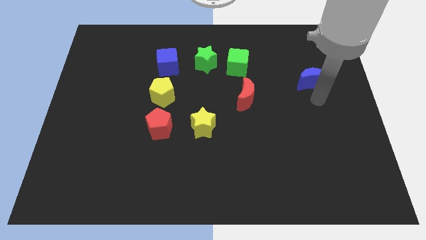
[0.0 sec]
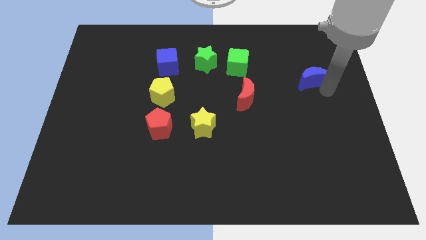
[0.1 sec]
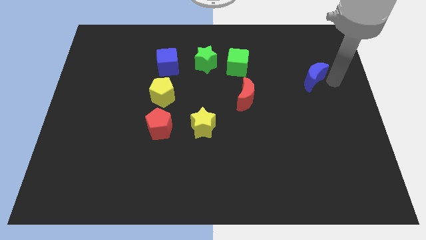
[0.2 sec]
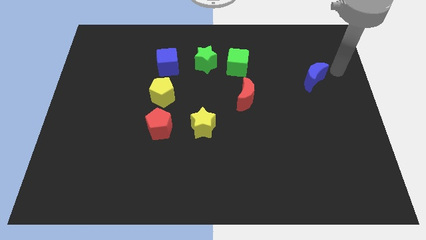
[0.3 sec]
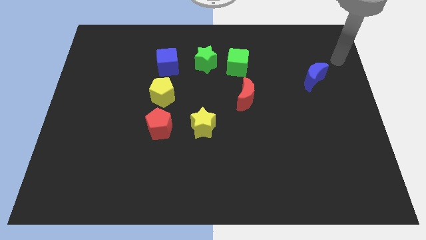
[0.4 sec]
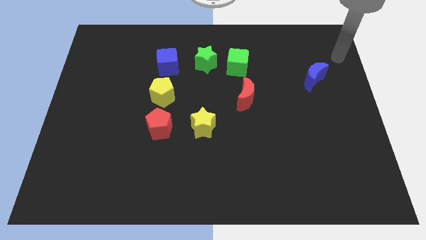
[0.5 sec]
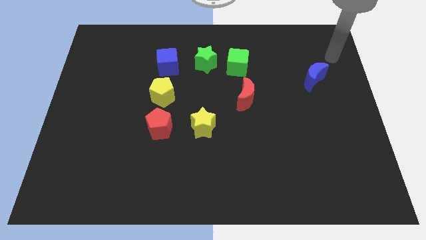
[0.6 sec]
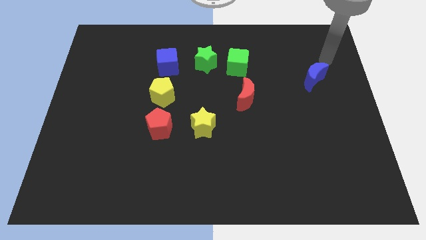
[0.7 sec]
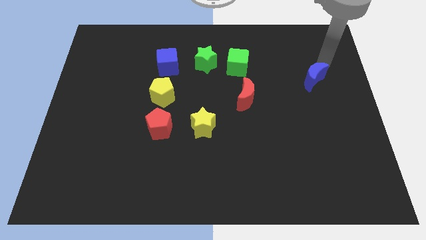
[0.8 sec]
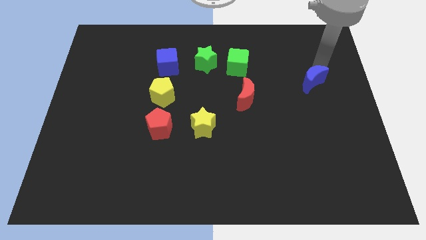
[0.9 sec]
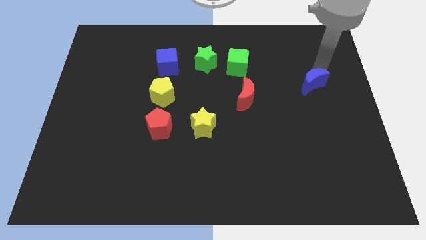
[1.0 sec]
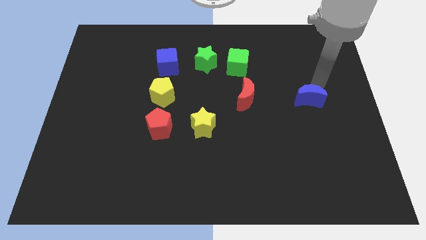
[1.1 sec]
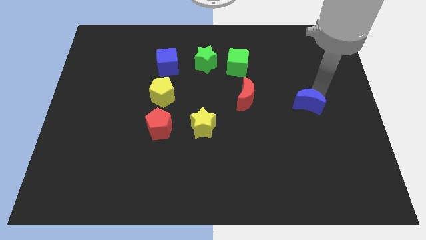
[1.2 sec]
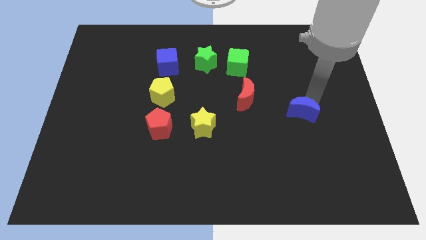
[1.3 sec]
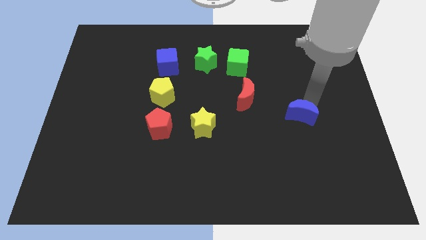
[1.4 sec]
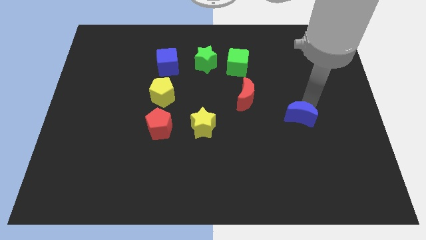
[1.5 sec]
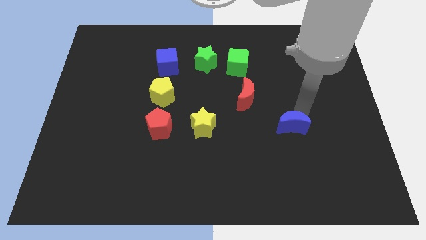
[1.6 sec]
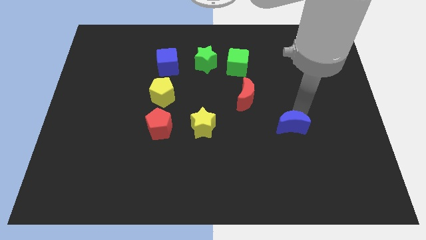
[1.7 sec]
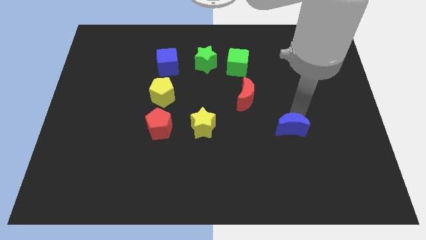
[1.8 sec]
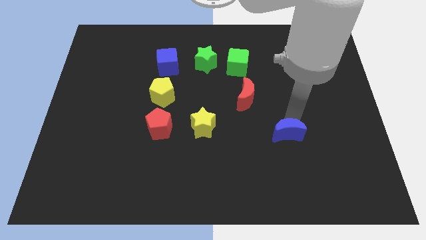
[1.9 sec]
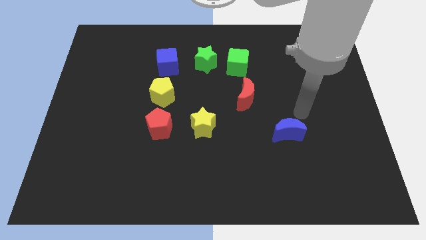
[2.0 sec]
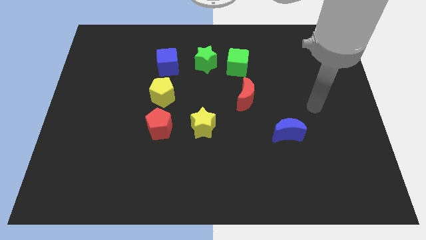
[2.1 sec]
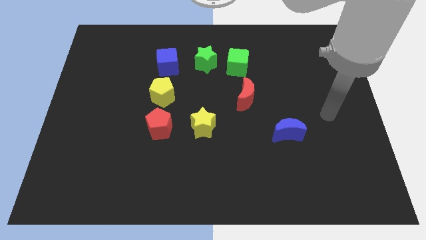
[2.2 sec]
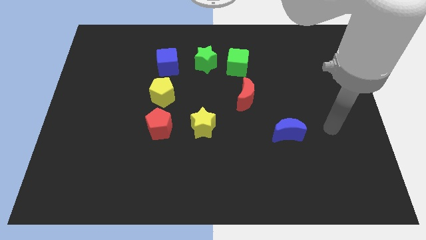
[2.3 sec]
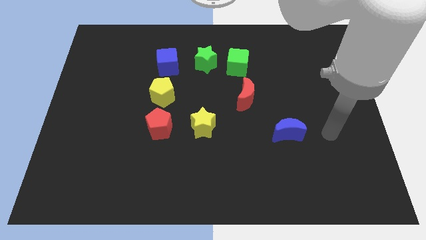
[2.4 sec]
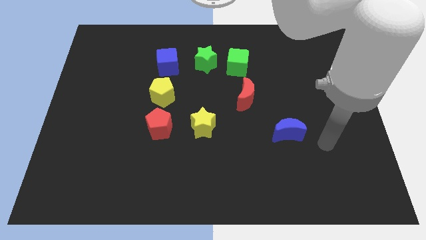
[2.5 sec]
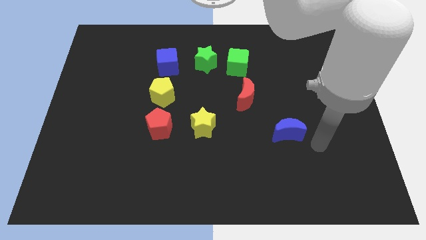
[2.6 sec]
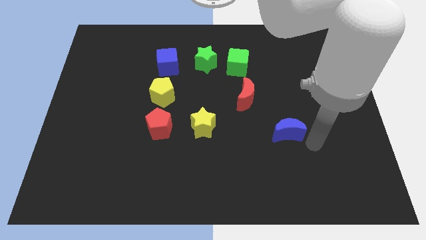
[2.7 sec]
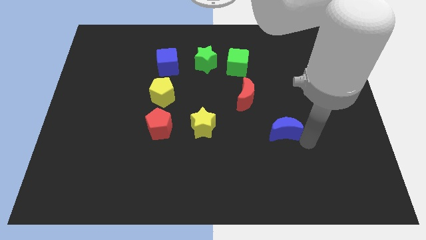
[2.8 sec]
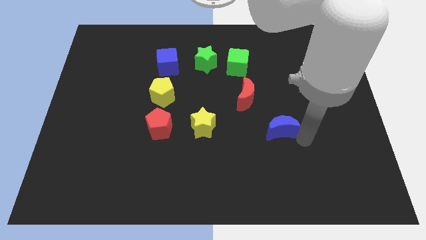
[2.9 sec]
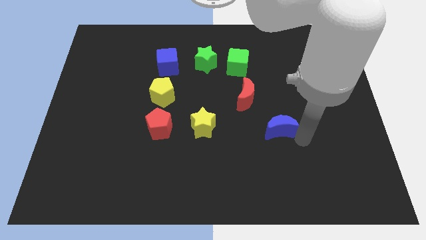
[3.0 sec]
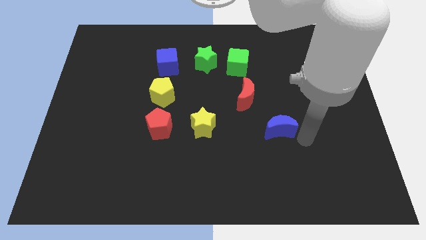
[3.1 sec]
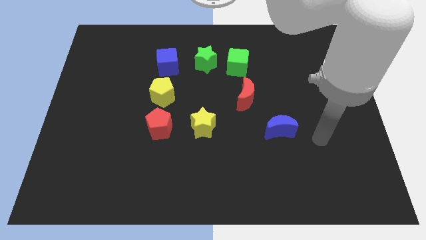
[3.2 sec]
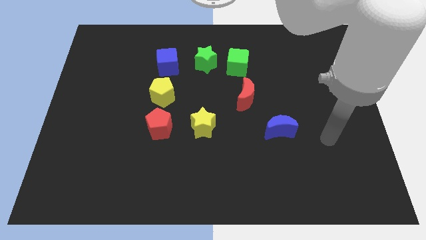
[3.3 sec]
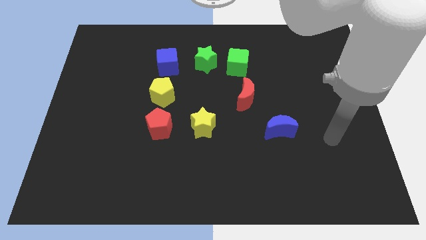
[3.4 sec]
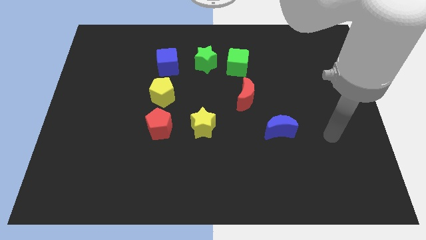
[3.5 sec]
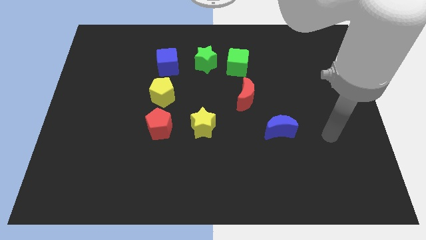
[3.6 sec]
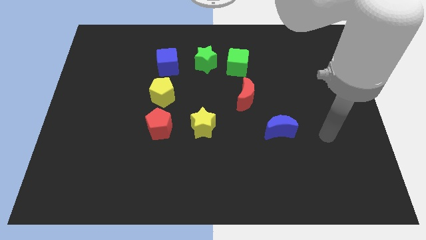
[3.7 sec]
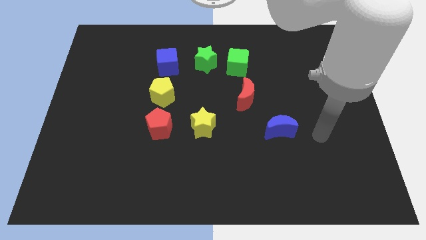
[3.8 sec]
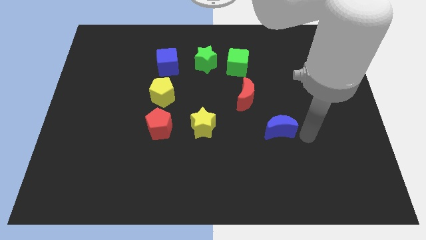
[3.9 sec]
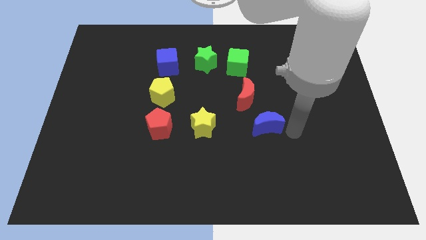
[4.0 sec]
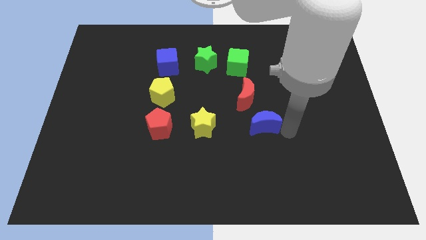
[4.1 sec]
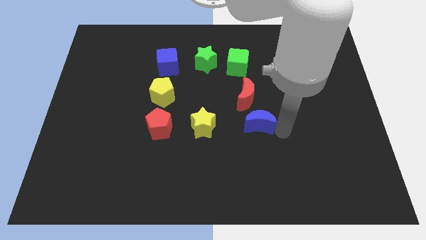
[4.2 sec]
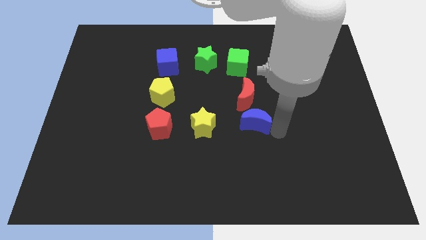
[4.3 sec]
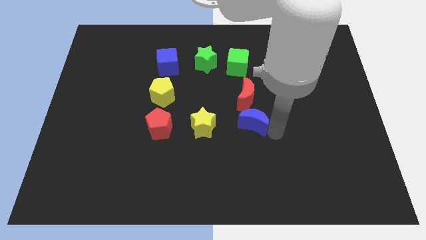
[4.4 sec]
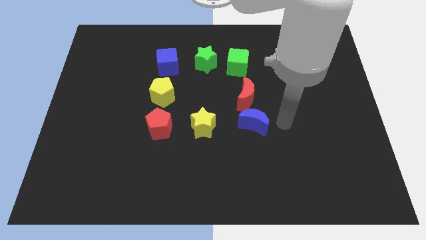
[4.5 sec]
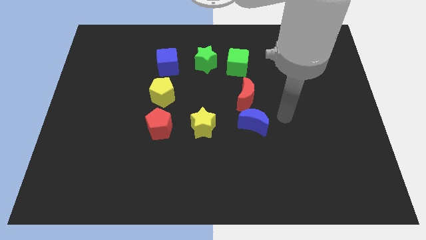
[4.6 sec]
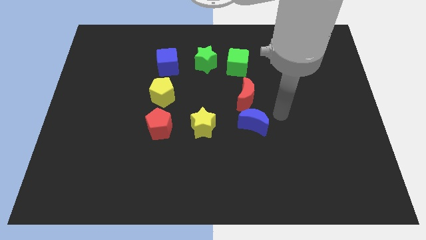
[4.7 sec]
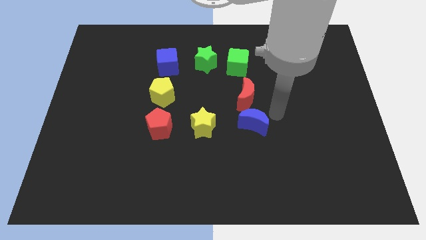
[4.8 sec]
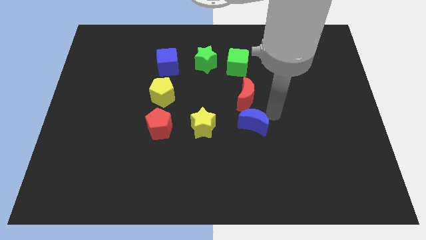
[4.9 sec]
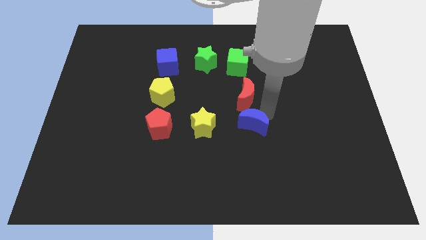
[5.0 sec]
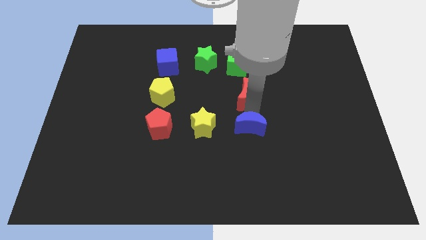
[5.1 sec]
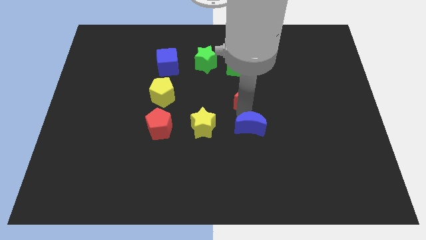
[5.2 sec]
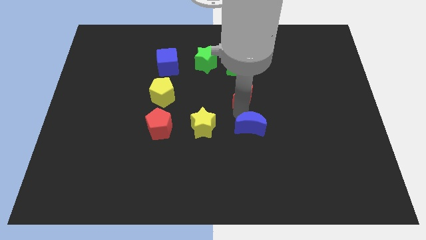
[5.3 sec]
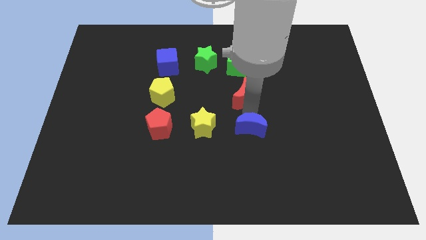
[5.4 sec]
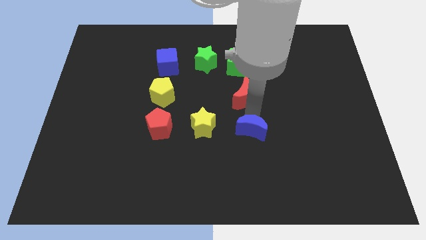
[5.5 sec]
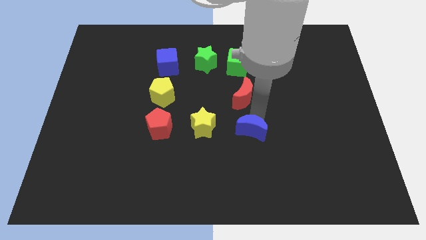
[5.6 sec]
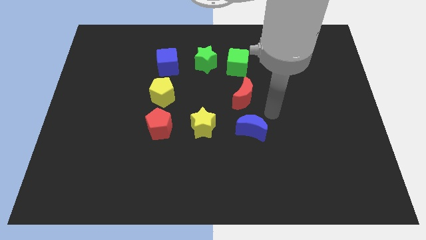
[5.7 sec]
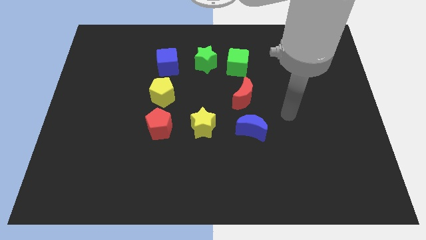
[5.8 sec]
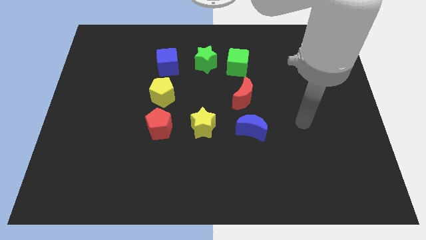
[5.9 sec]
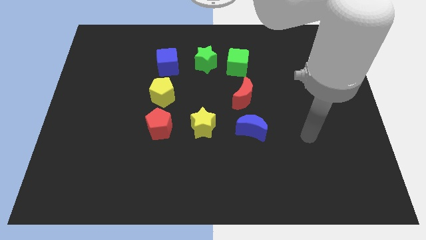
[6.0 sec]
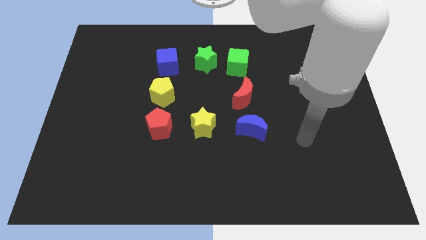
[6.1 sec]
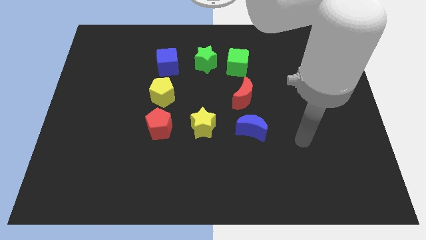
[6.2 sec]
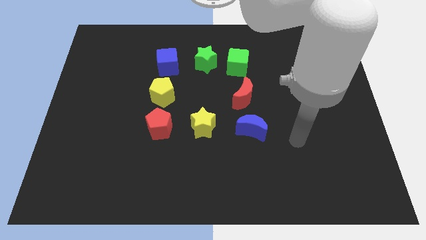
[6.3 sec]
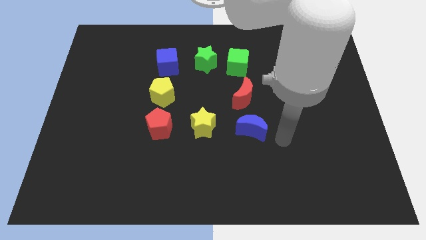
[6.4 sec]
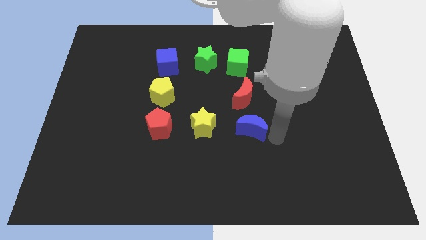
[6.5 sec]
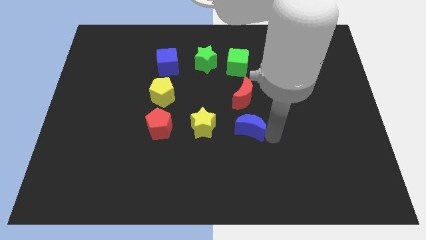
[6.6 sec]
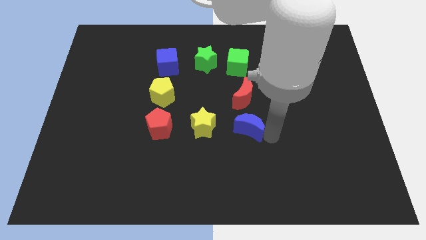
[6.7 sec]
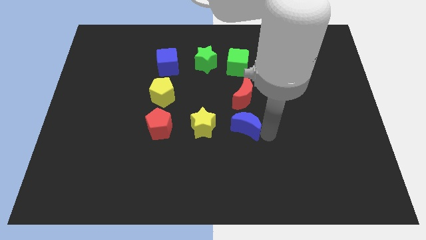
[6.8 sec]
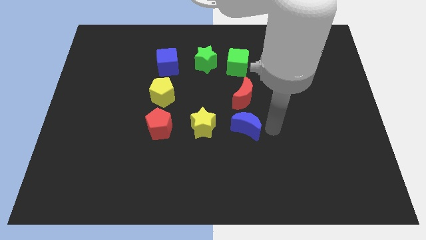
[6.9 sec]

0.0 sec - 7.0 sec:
push the blue crescent to the bottom of red crescent

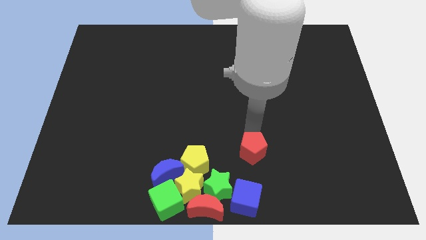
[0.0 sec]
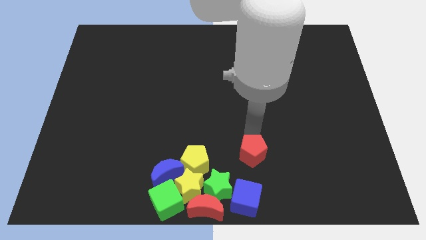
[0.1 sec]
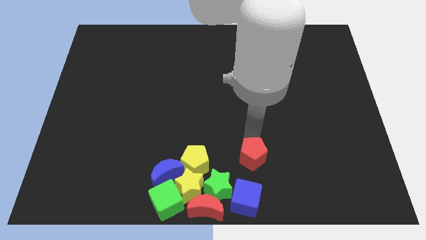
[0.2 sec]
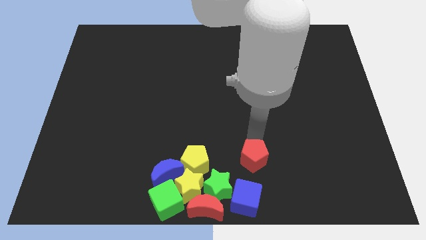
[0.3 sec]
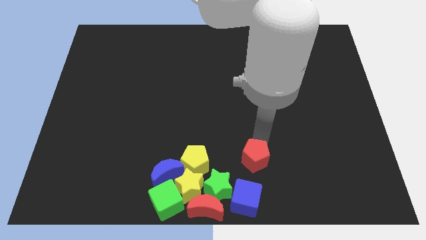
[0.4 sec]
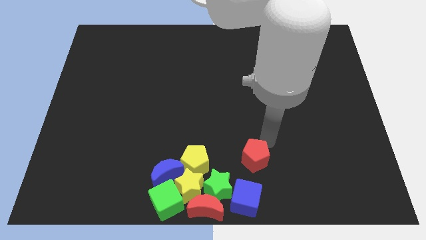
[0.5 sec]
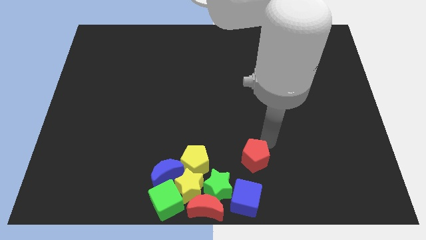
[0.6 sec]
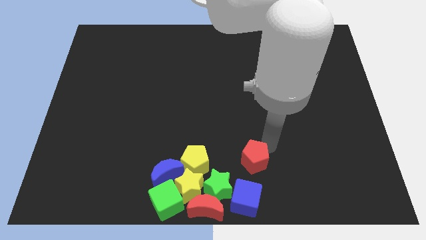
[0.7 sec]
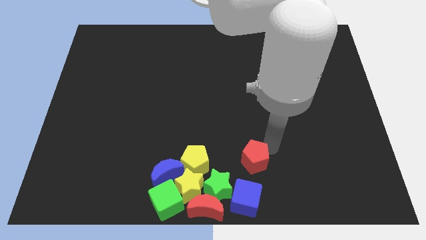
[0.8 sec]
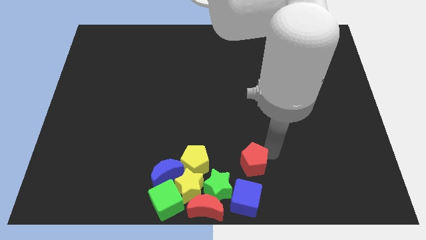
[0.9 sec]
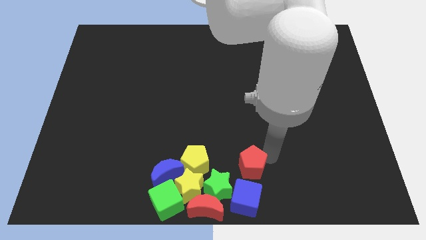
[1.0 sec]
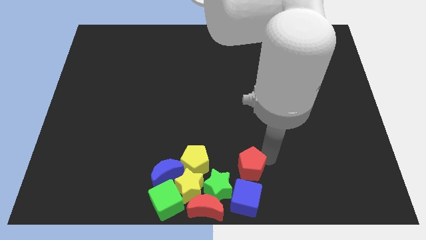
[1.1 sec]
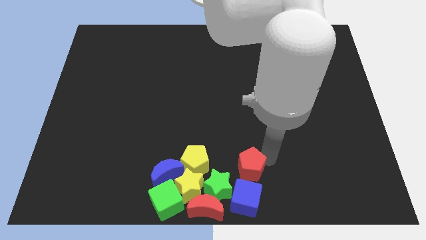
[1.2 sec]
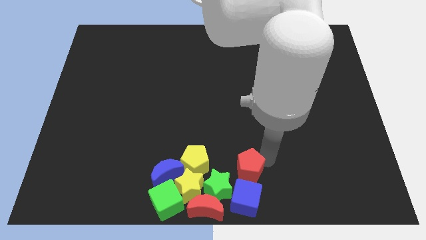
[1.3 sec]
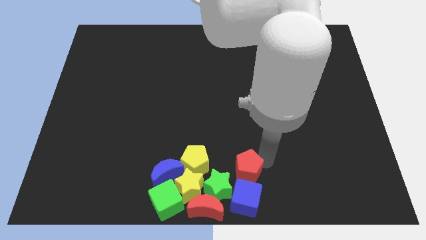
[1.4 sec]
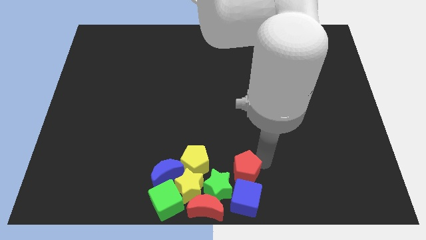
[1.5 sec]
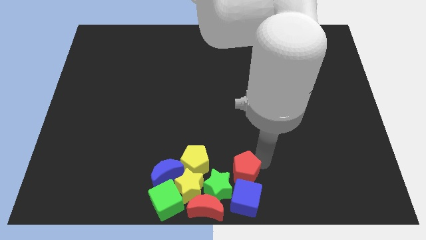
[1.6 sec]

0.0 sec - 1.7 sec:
place the red pentagon on top of the blue cube
